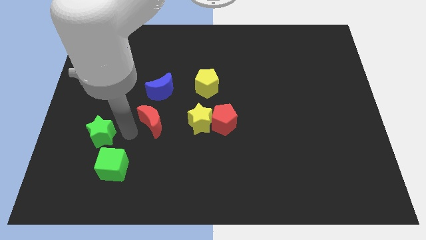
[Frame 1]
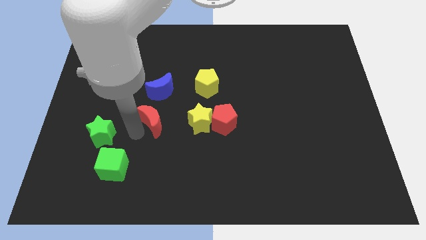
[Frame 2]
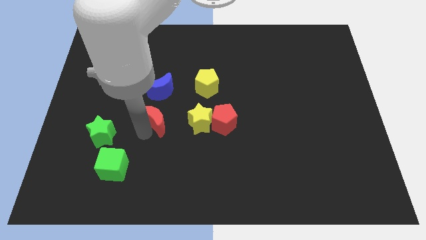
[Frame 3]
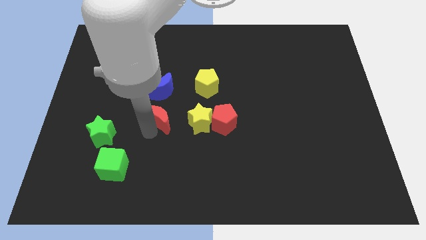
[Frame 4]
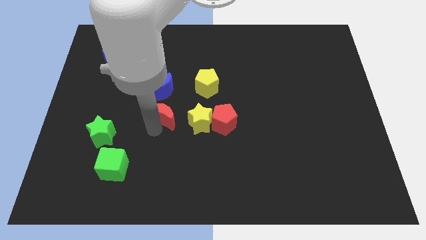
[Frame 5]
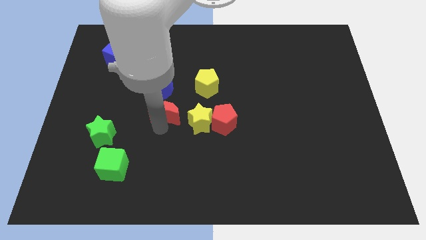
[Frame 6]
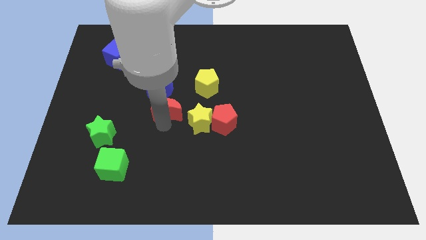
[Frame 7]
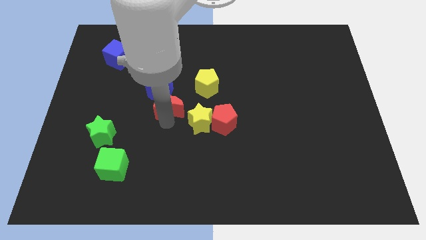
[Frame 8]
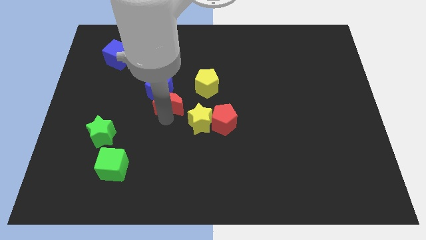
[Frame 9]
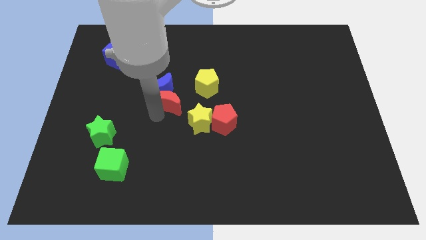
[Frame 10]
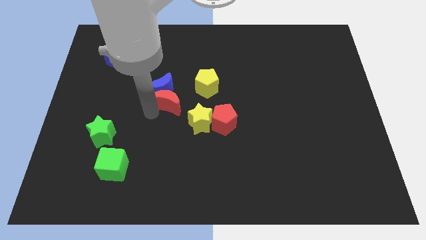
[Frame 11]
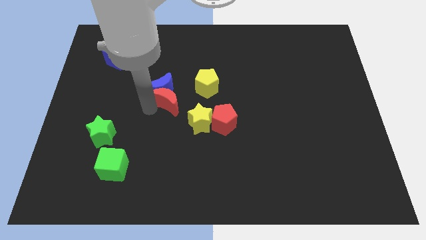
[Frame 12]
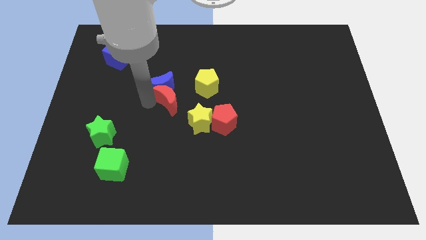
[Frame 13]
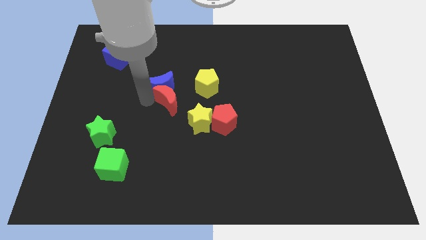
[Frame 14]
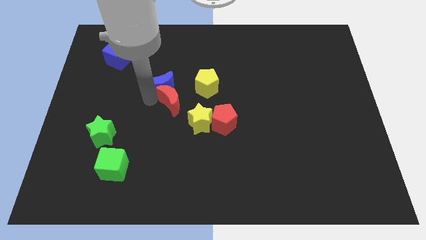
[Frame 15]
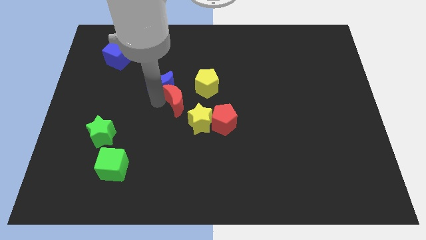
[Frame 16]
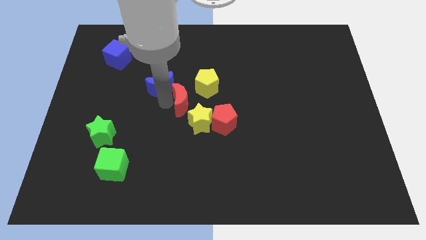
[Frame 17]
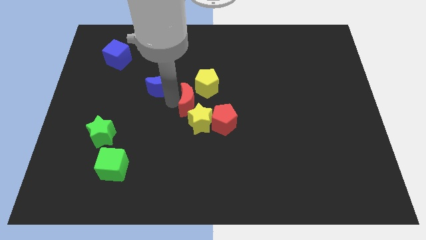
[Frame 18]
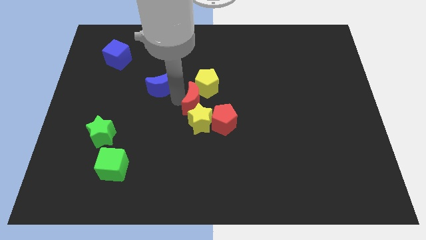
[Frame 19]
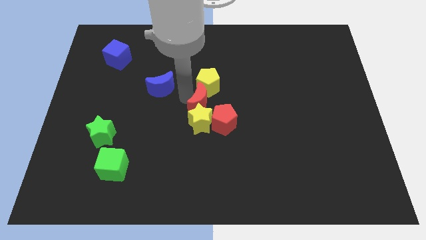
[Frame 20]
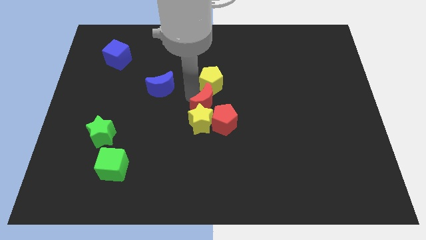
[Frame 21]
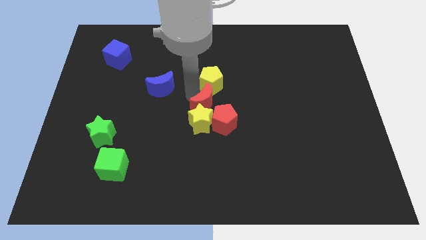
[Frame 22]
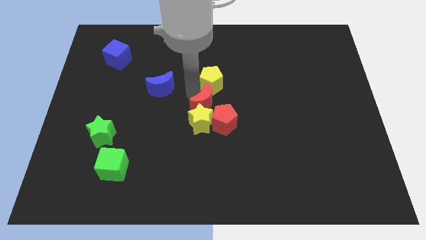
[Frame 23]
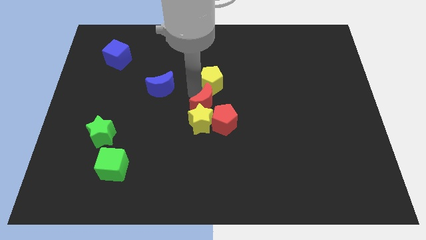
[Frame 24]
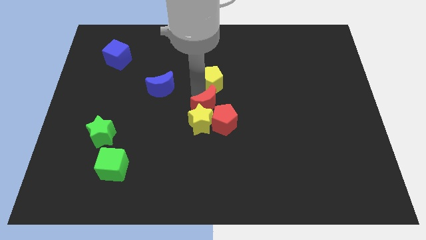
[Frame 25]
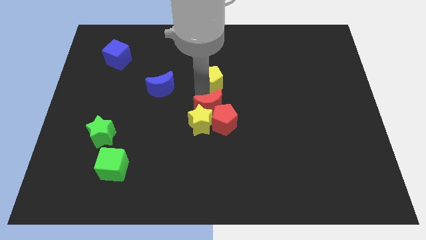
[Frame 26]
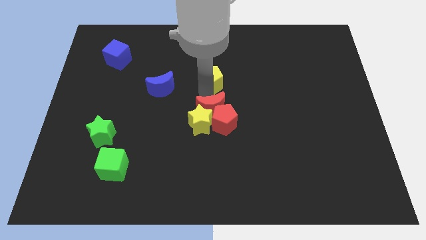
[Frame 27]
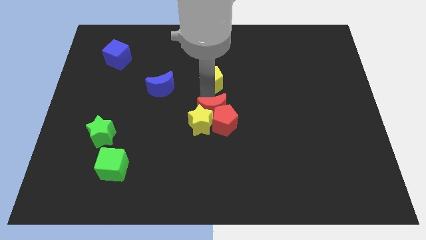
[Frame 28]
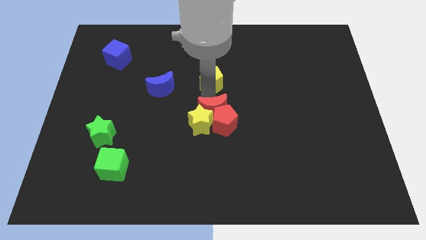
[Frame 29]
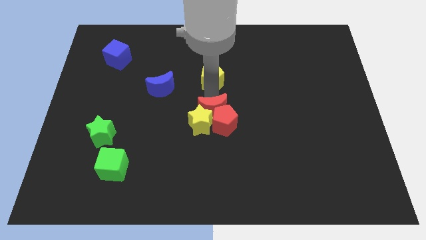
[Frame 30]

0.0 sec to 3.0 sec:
push the red crescent above the yellow star and red pentagon

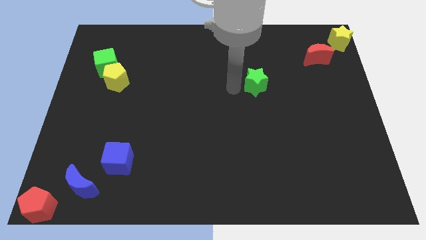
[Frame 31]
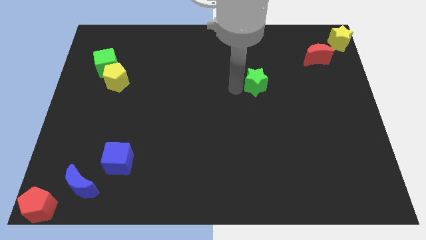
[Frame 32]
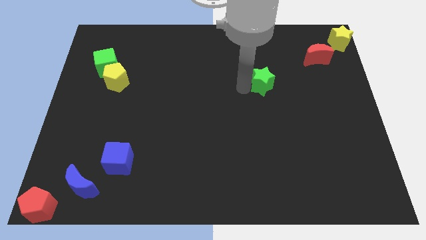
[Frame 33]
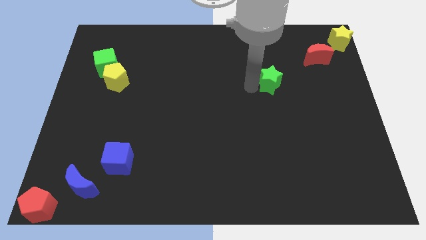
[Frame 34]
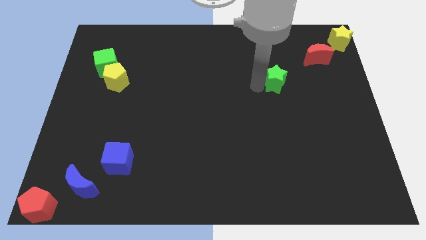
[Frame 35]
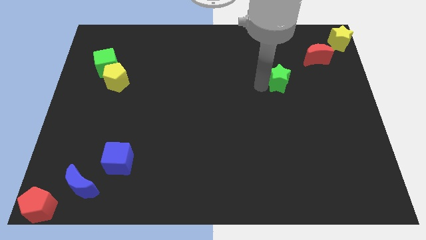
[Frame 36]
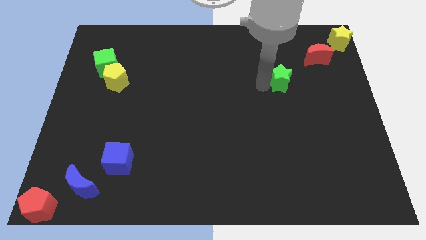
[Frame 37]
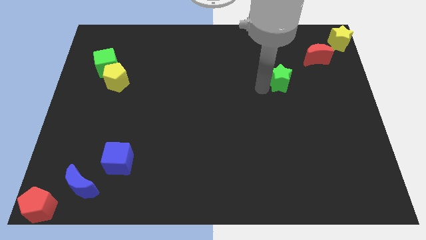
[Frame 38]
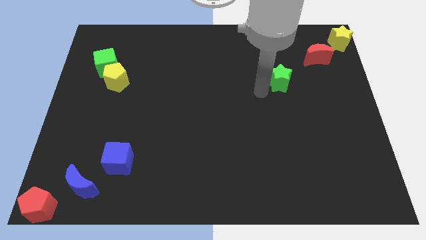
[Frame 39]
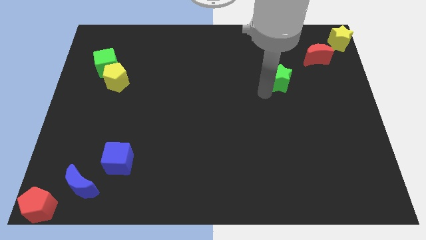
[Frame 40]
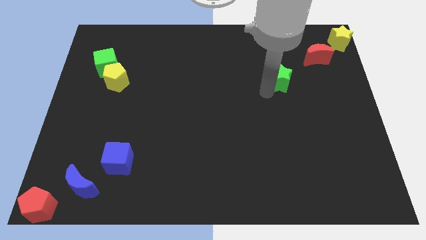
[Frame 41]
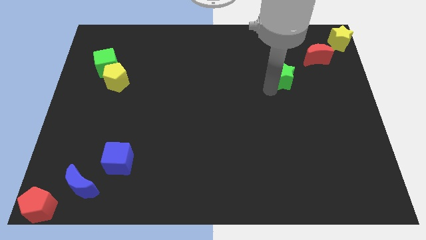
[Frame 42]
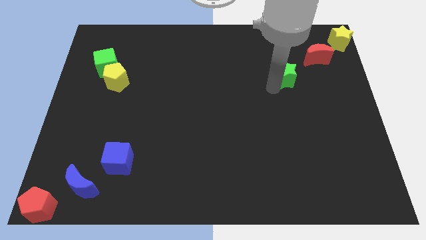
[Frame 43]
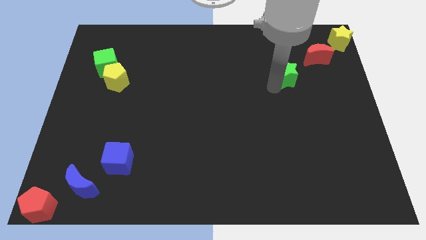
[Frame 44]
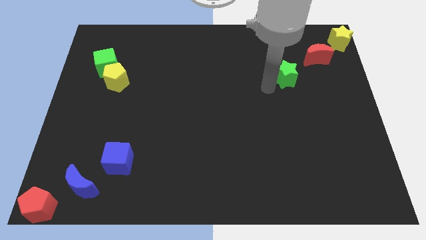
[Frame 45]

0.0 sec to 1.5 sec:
push the green star towards the red moon

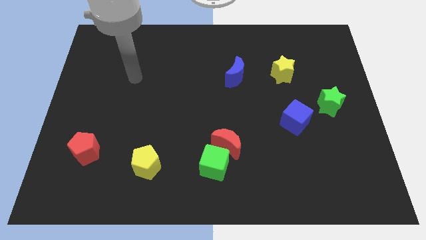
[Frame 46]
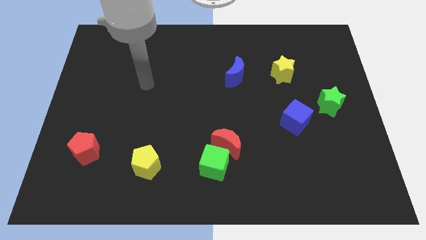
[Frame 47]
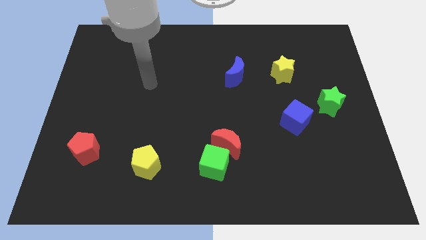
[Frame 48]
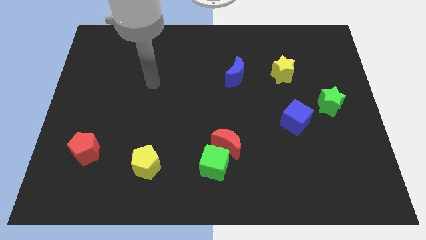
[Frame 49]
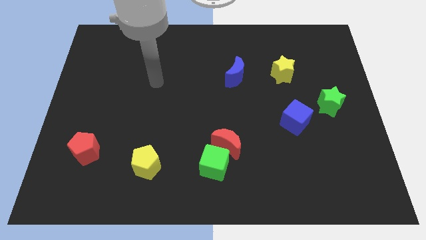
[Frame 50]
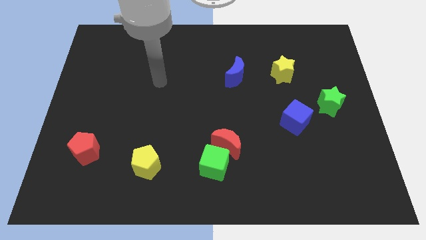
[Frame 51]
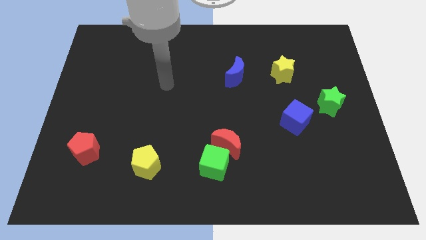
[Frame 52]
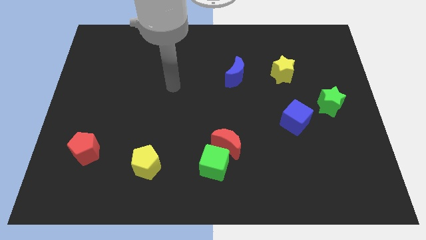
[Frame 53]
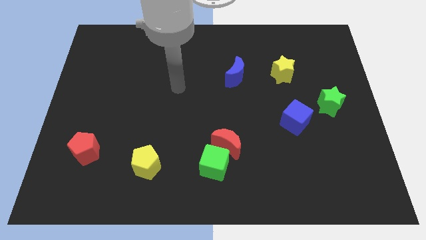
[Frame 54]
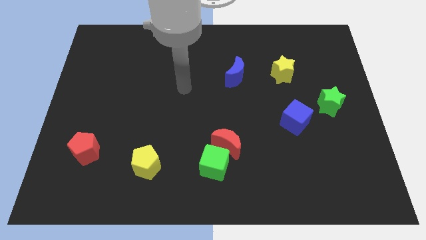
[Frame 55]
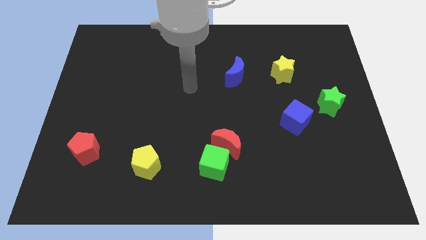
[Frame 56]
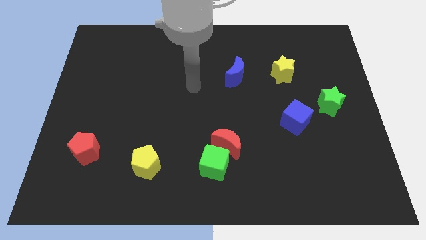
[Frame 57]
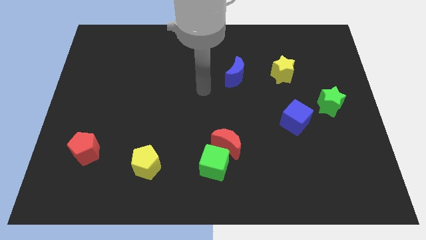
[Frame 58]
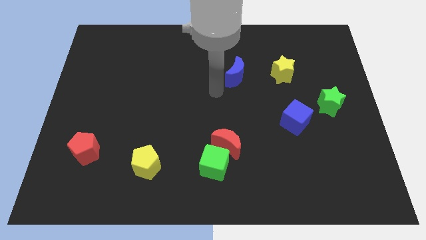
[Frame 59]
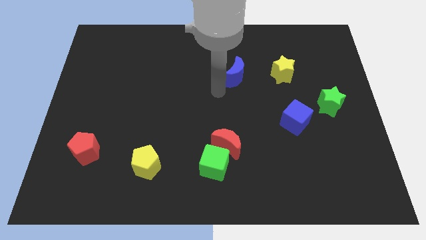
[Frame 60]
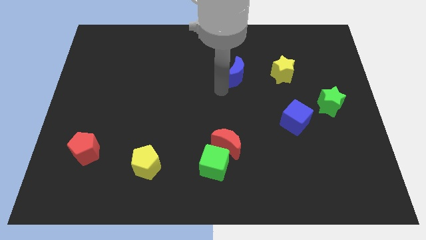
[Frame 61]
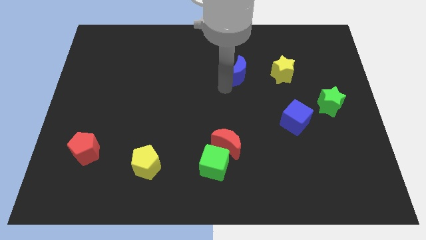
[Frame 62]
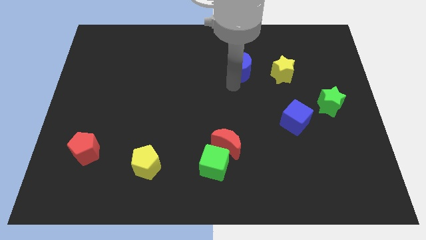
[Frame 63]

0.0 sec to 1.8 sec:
place your arm near to the blue moon

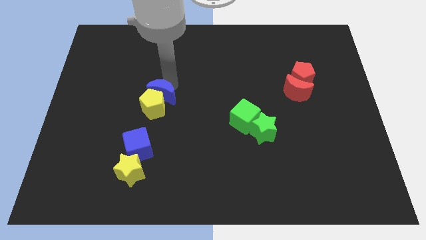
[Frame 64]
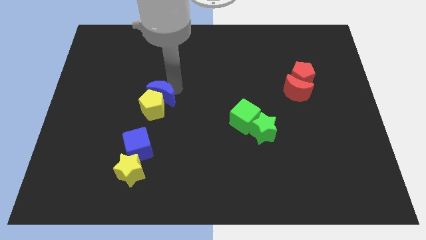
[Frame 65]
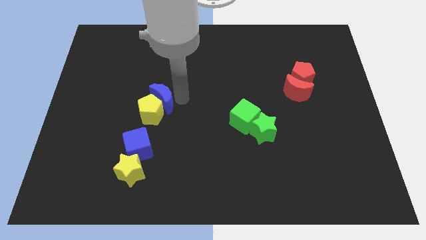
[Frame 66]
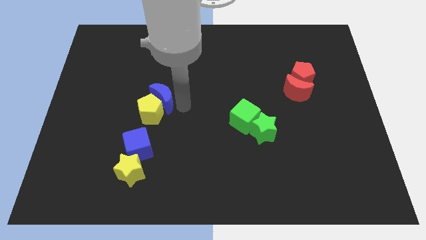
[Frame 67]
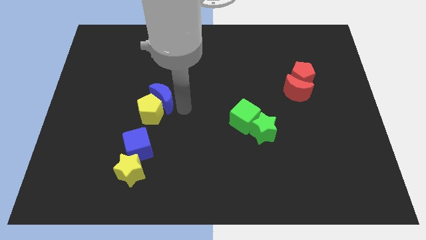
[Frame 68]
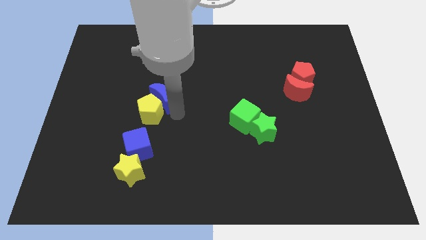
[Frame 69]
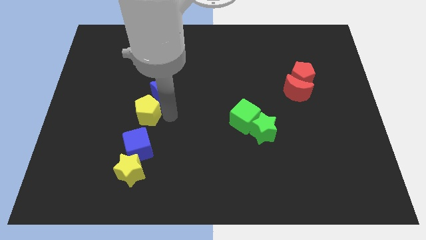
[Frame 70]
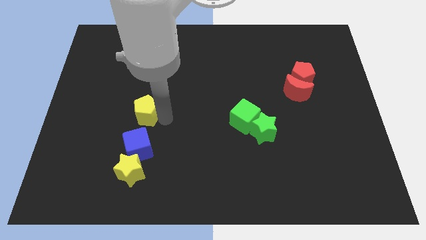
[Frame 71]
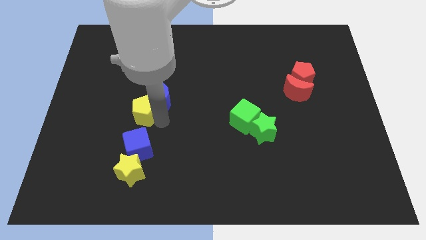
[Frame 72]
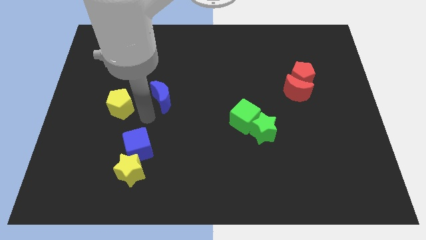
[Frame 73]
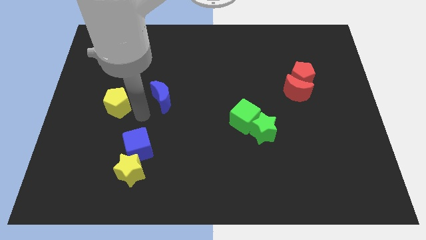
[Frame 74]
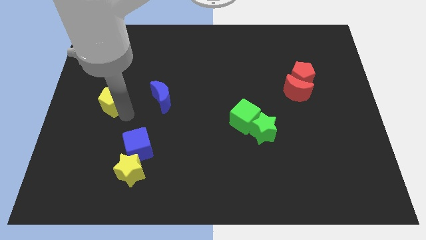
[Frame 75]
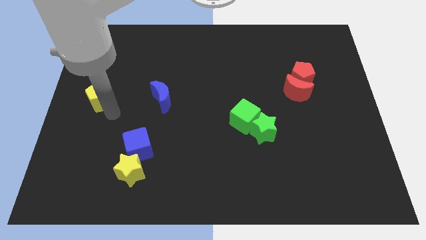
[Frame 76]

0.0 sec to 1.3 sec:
separate the yellow pentagon and the blue crescent

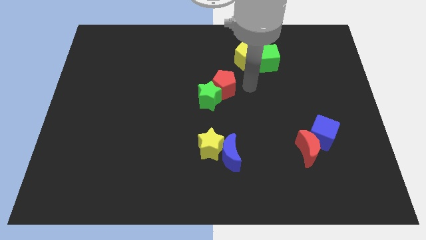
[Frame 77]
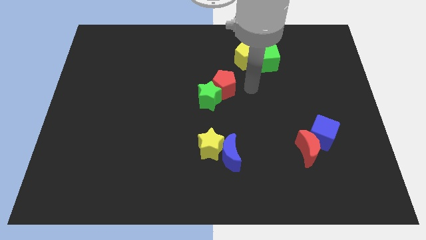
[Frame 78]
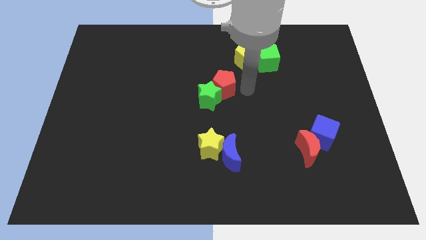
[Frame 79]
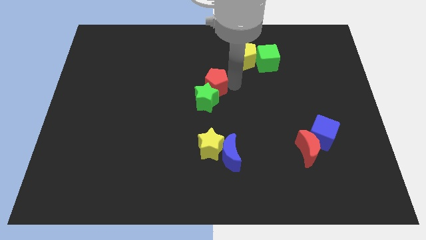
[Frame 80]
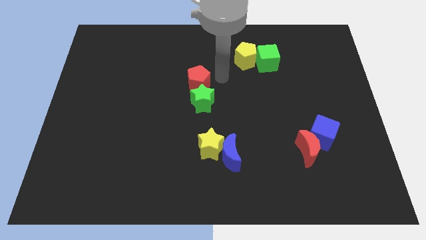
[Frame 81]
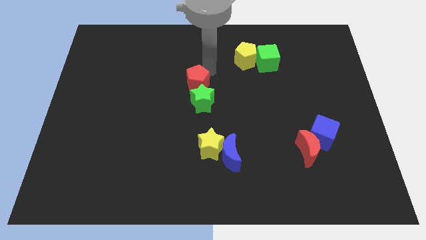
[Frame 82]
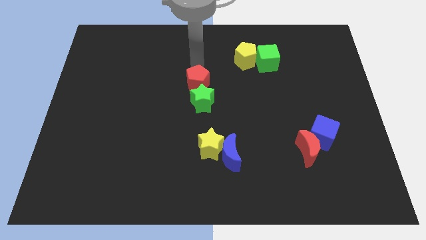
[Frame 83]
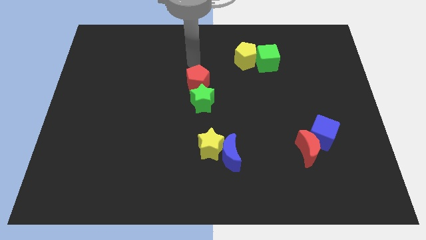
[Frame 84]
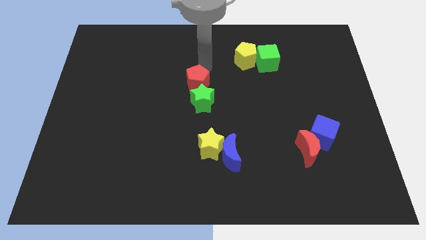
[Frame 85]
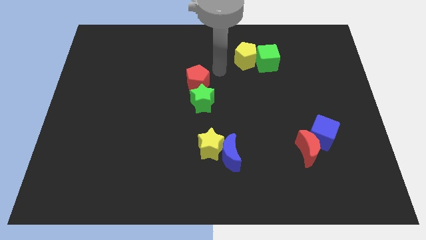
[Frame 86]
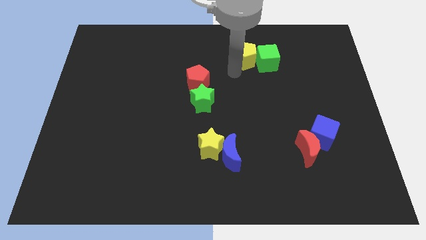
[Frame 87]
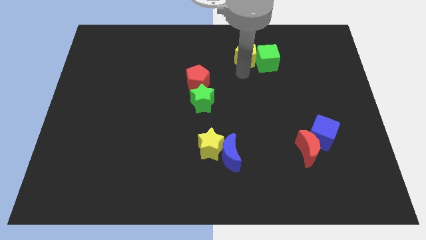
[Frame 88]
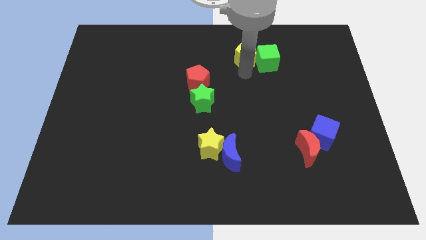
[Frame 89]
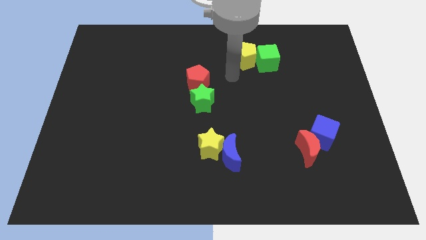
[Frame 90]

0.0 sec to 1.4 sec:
place your arm in between red pentagon and yellow pentagon
